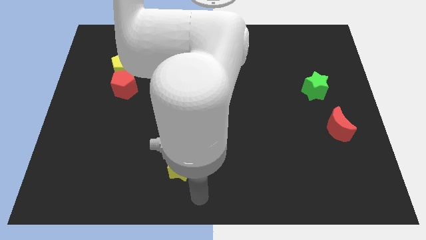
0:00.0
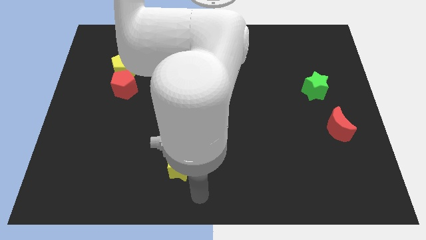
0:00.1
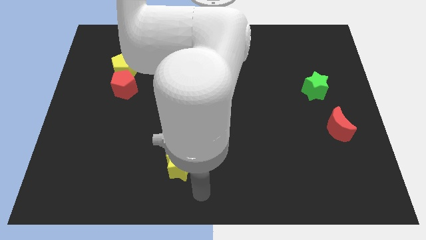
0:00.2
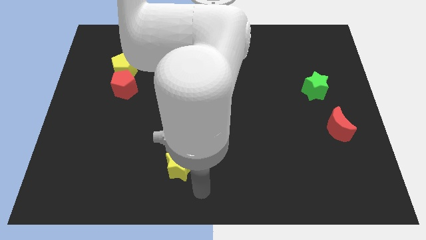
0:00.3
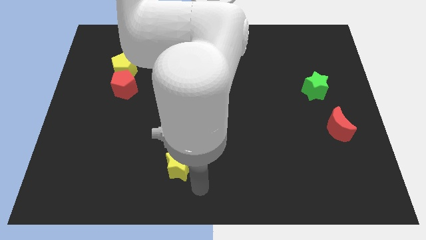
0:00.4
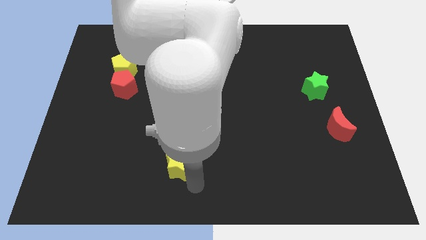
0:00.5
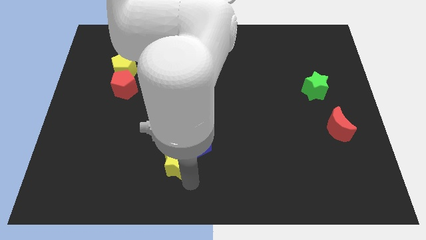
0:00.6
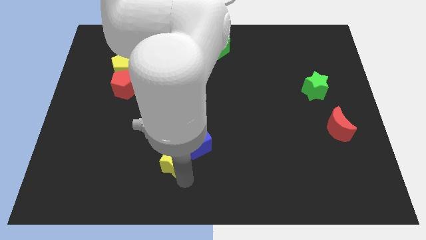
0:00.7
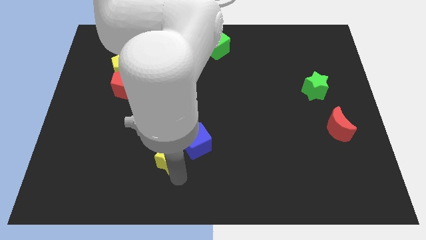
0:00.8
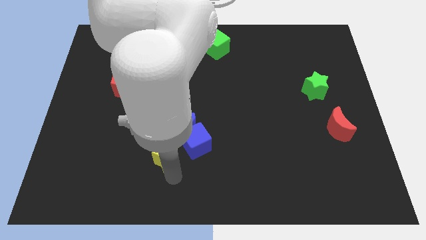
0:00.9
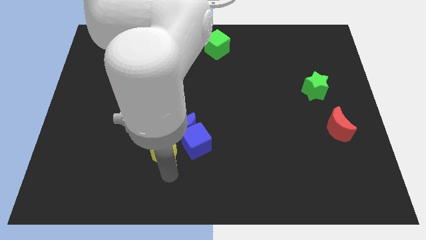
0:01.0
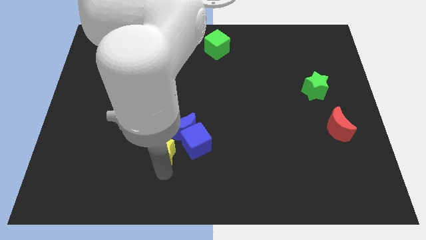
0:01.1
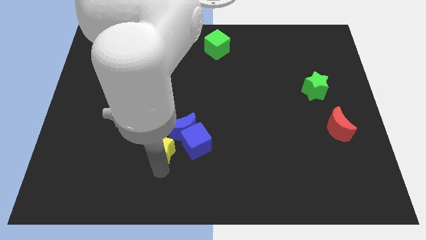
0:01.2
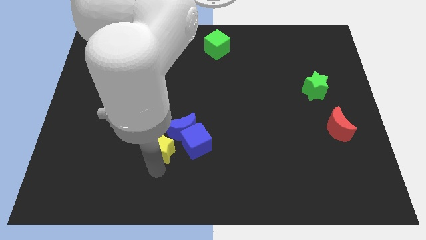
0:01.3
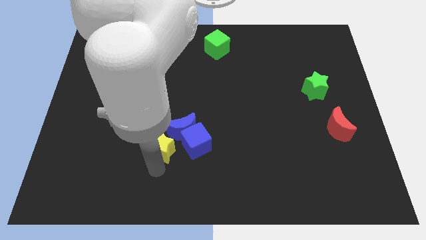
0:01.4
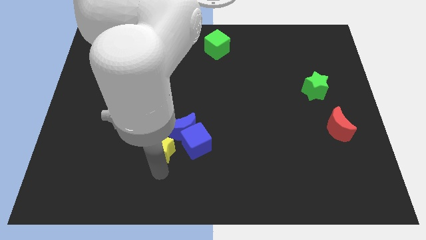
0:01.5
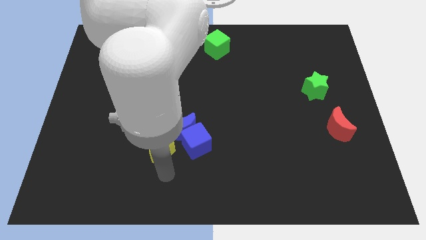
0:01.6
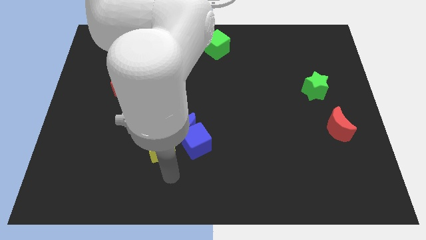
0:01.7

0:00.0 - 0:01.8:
put the yellow star left to the blue cube

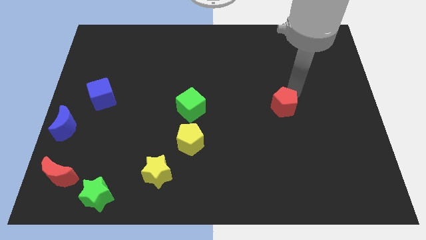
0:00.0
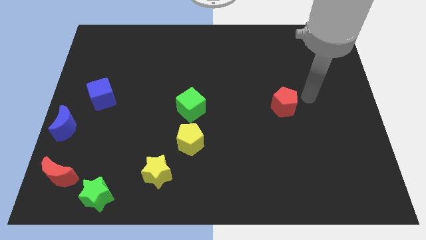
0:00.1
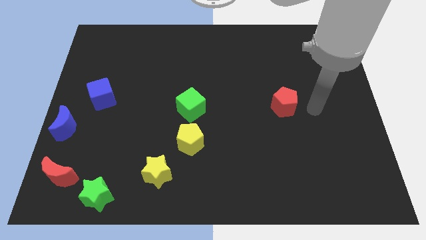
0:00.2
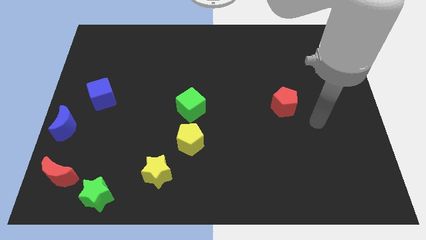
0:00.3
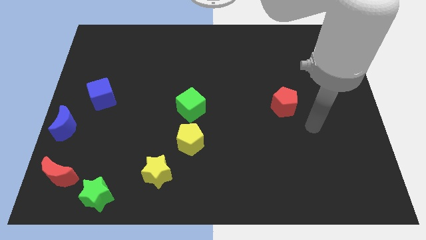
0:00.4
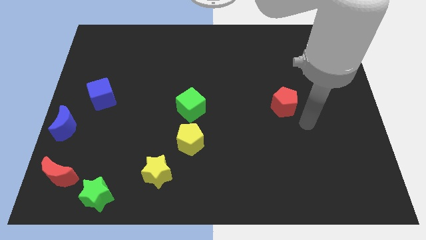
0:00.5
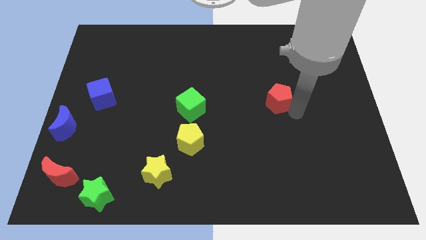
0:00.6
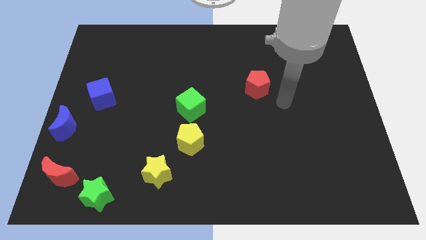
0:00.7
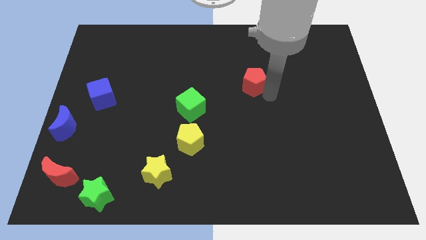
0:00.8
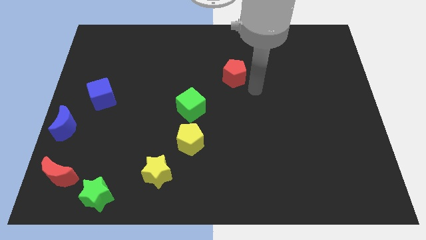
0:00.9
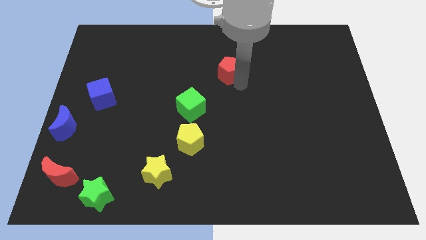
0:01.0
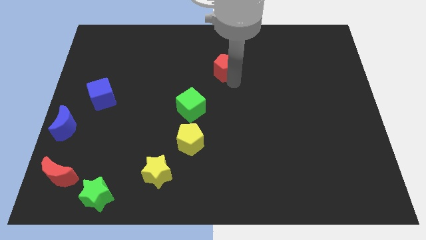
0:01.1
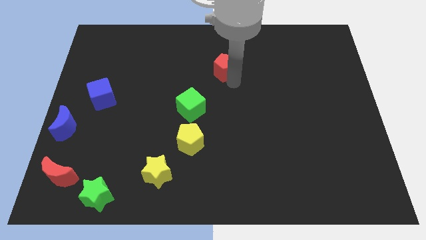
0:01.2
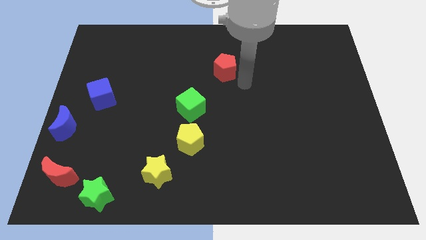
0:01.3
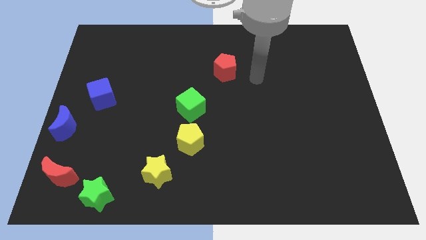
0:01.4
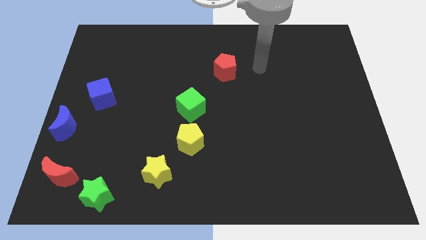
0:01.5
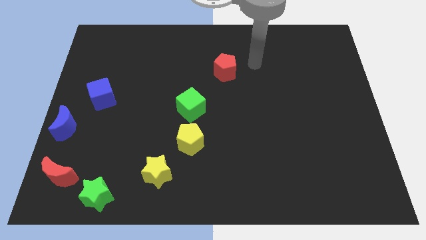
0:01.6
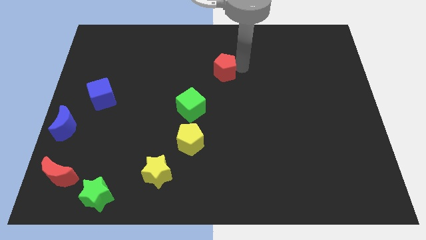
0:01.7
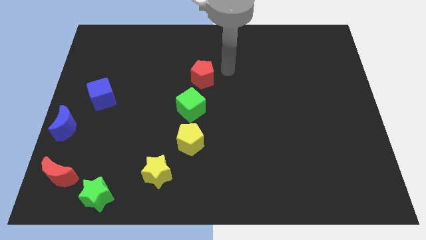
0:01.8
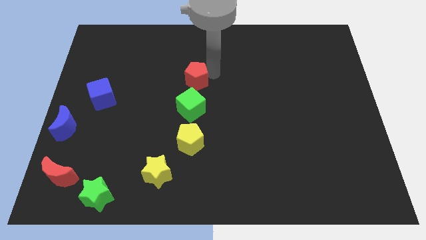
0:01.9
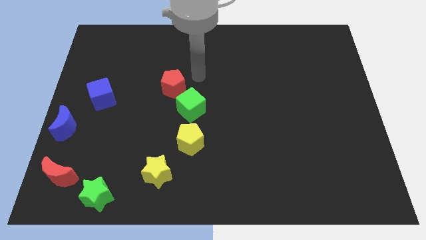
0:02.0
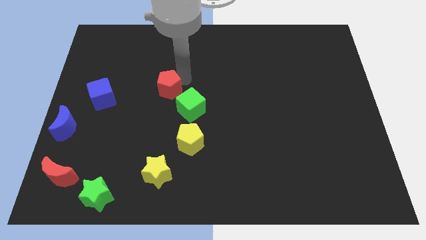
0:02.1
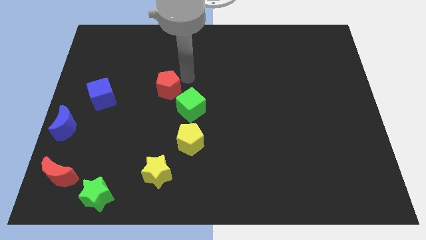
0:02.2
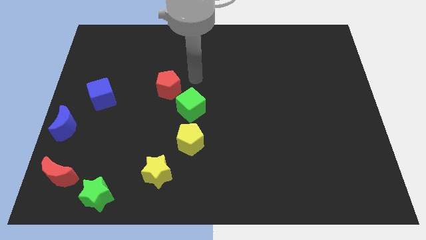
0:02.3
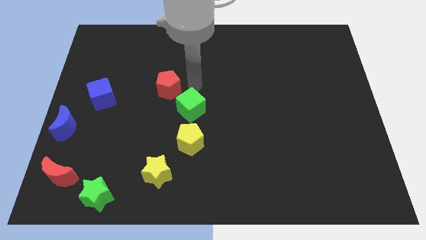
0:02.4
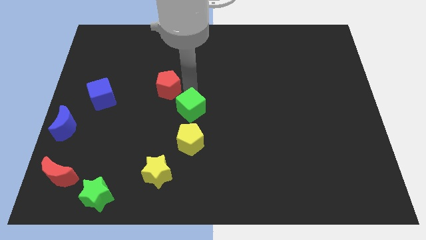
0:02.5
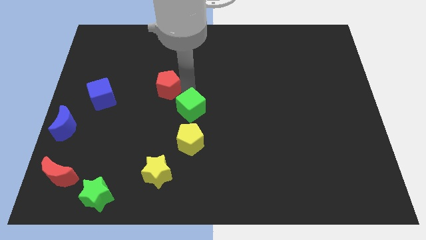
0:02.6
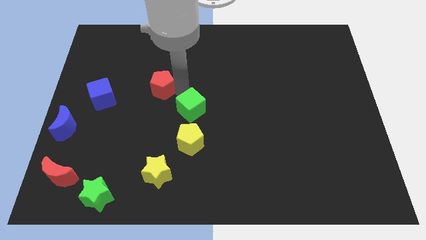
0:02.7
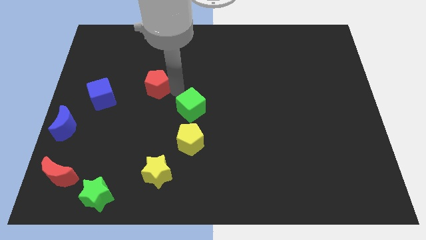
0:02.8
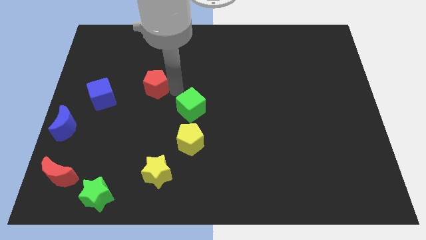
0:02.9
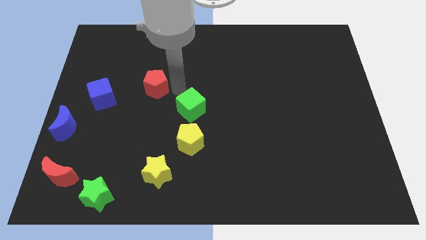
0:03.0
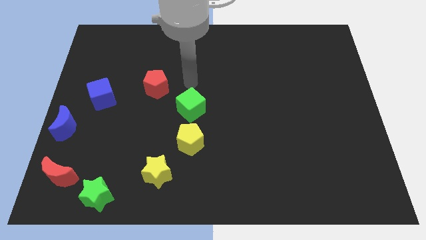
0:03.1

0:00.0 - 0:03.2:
push the red pentagon to the top of the yellow star

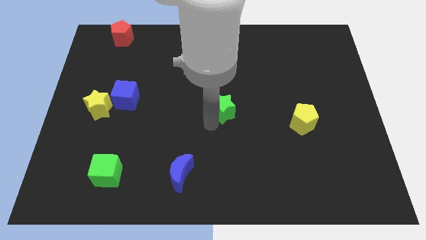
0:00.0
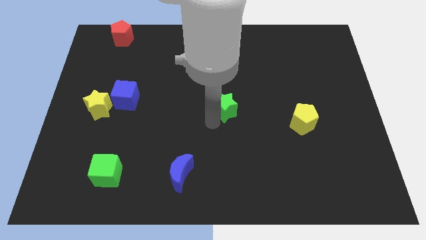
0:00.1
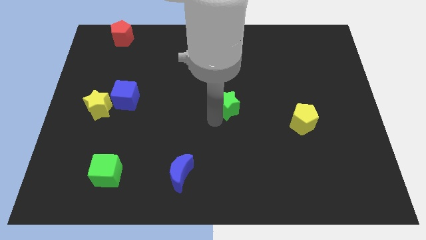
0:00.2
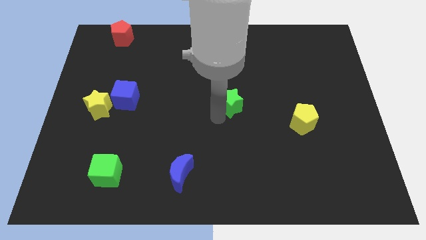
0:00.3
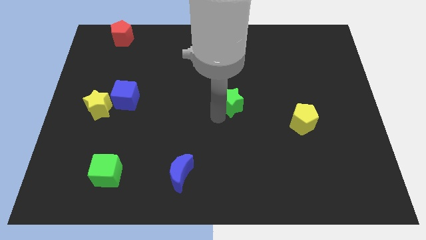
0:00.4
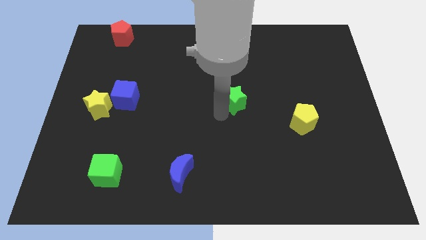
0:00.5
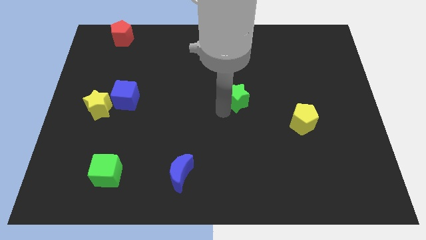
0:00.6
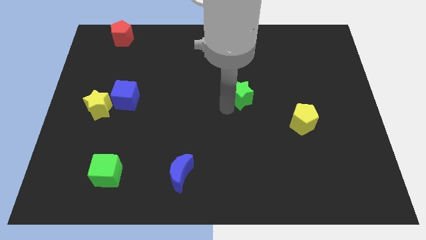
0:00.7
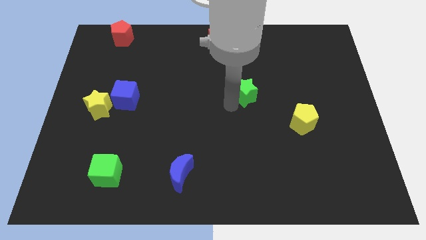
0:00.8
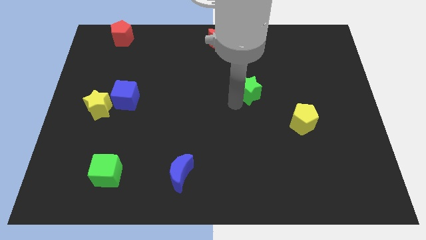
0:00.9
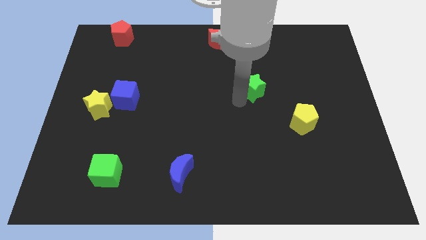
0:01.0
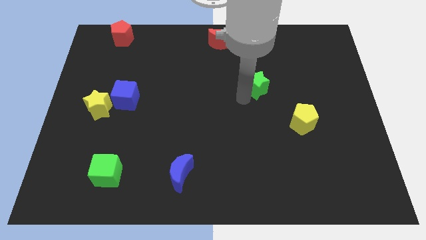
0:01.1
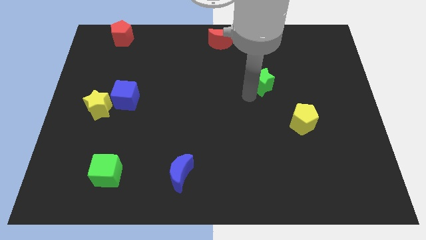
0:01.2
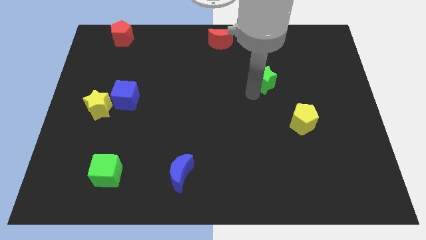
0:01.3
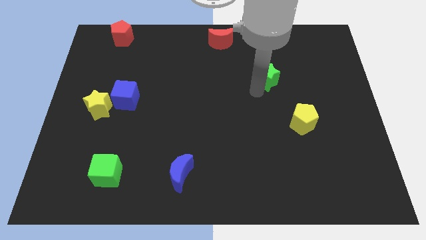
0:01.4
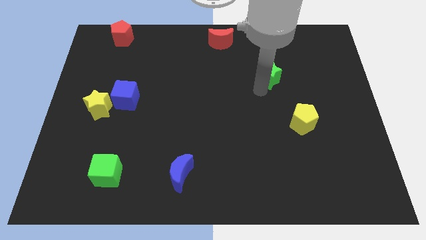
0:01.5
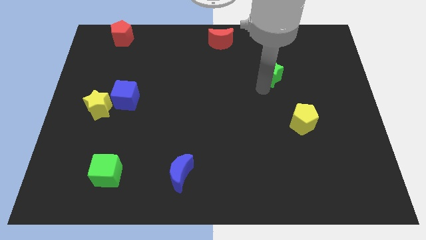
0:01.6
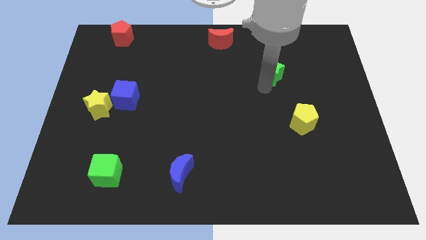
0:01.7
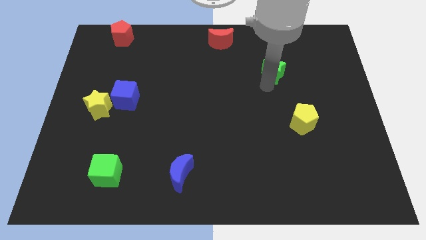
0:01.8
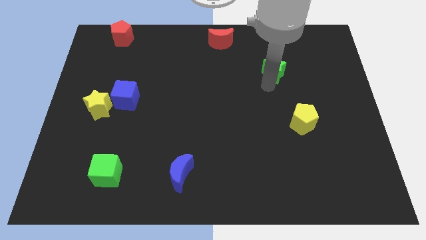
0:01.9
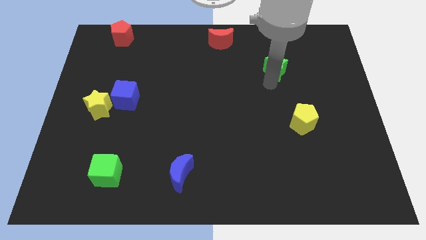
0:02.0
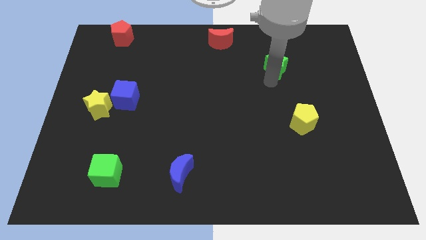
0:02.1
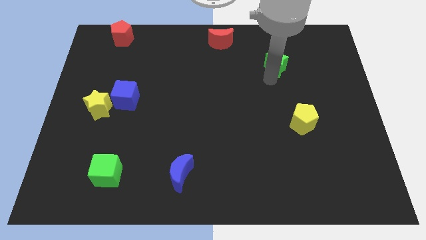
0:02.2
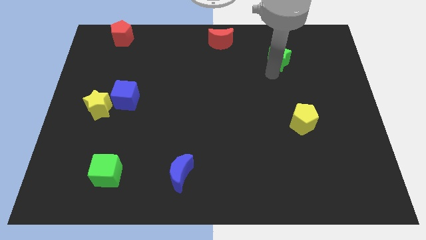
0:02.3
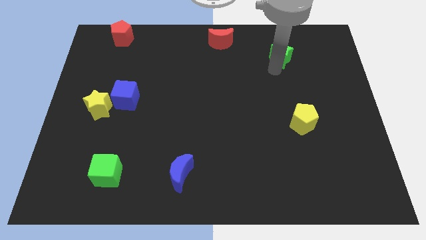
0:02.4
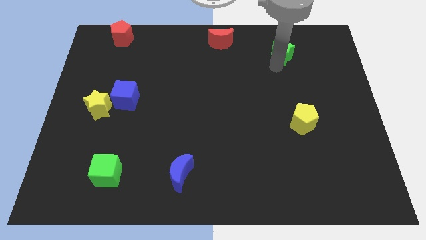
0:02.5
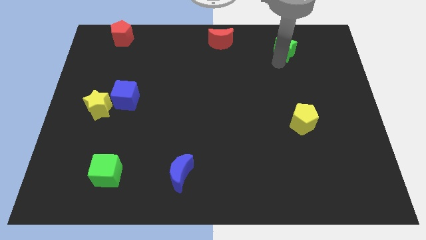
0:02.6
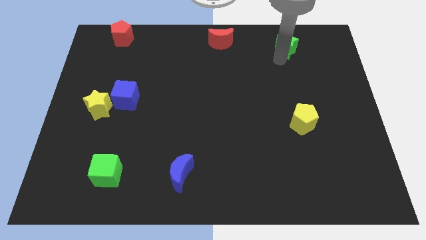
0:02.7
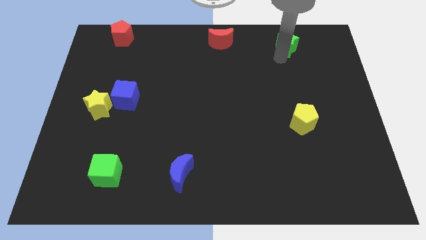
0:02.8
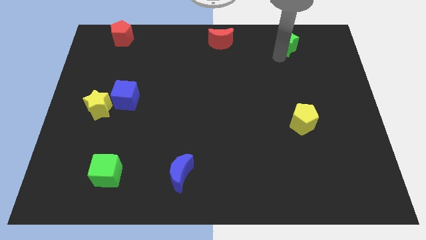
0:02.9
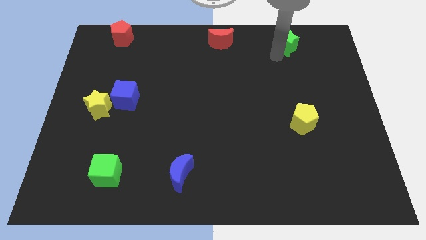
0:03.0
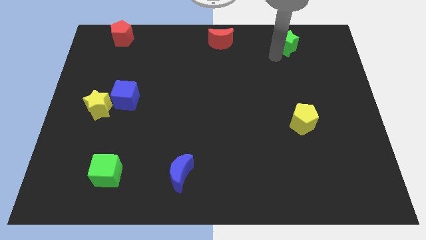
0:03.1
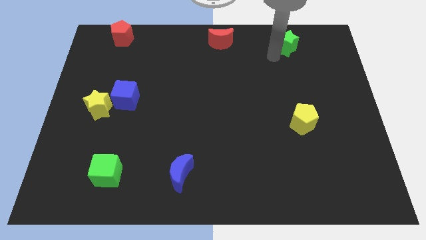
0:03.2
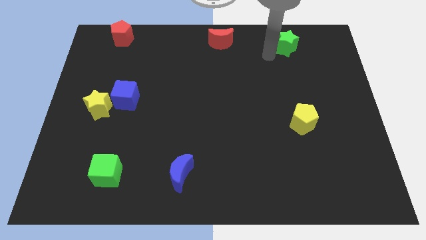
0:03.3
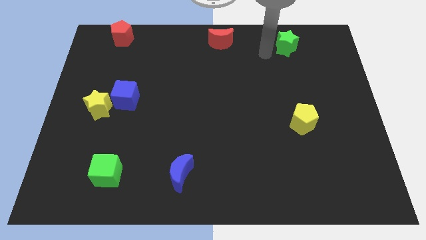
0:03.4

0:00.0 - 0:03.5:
push the green star towards the top right side of the board

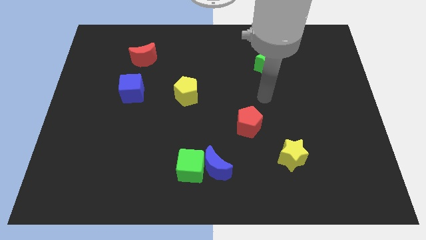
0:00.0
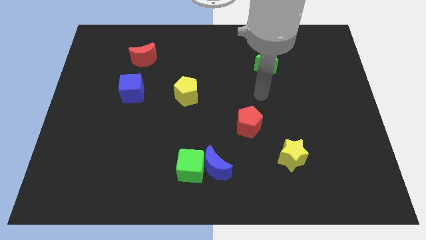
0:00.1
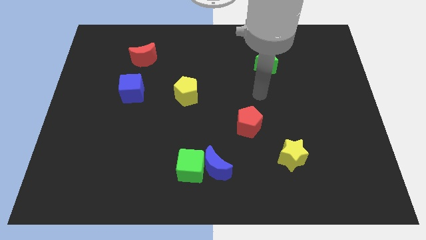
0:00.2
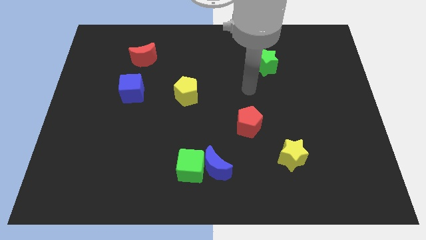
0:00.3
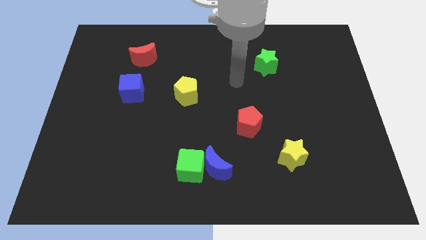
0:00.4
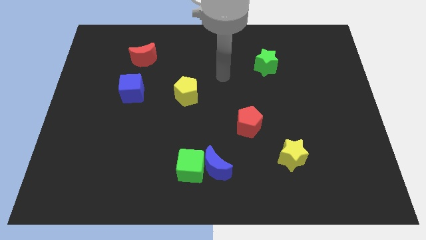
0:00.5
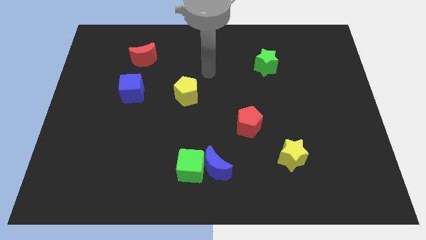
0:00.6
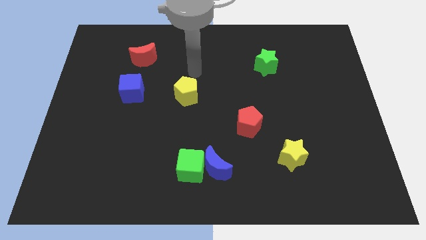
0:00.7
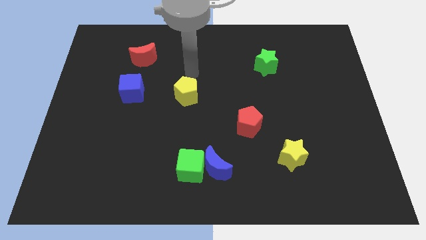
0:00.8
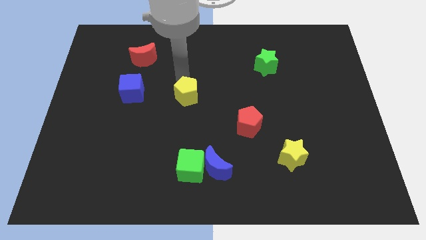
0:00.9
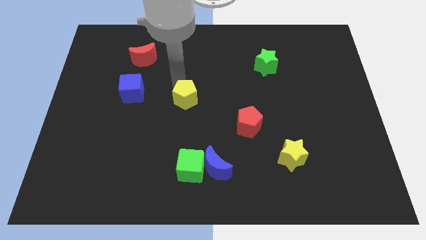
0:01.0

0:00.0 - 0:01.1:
touch the top of yellow pentagon
